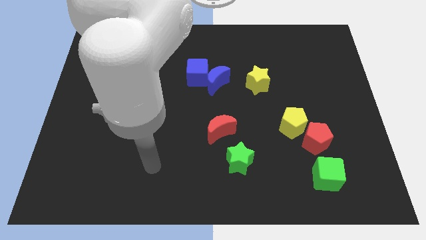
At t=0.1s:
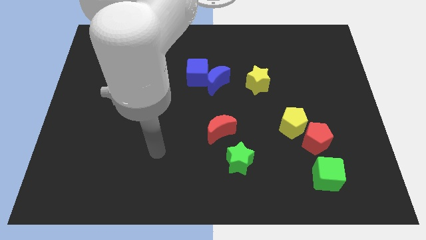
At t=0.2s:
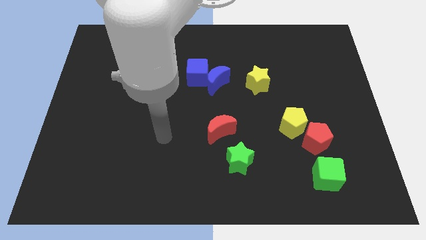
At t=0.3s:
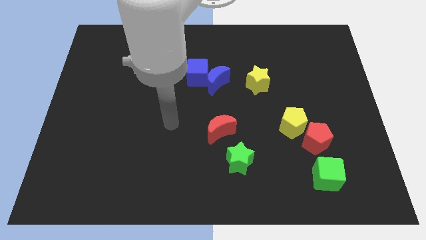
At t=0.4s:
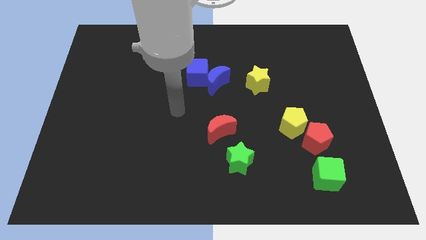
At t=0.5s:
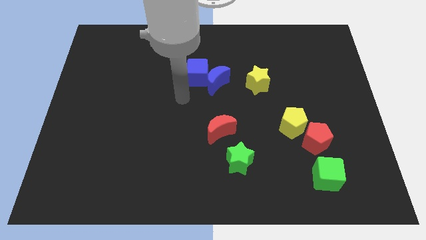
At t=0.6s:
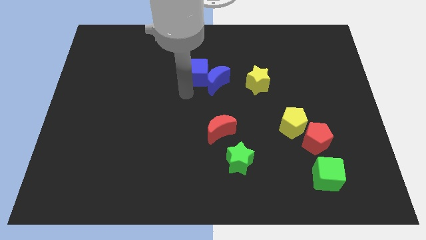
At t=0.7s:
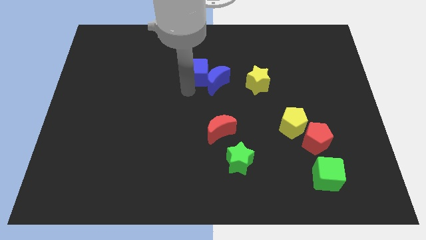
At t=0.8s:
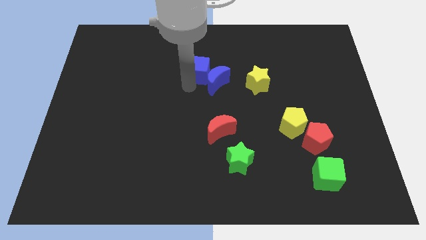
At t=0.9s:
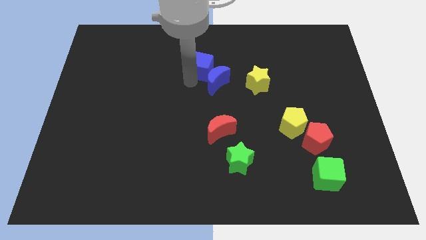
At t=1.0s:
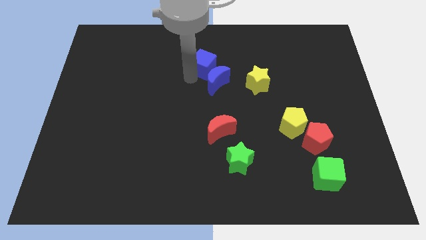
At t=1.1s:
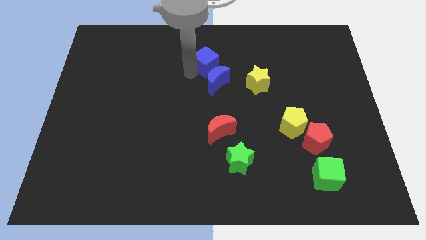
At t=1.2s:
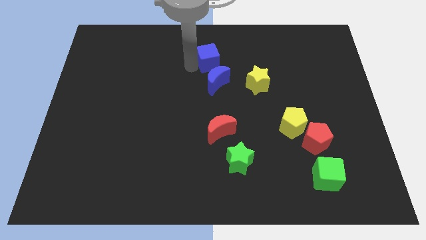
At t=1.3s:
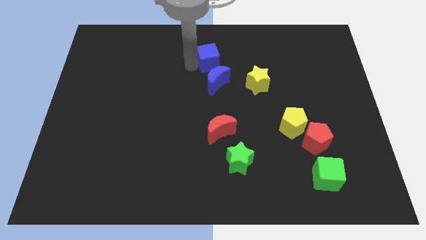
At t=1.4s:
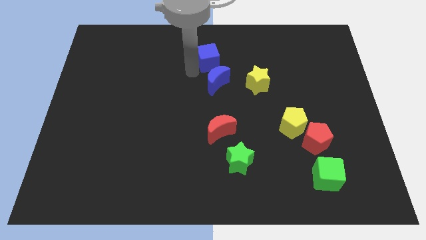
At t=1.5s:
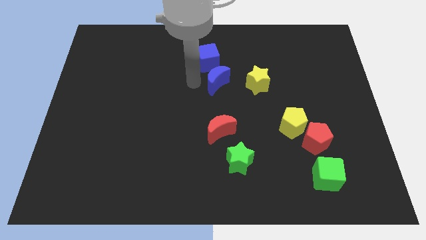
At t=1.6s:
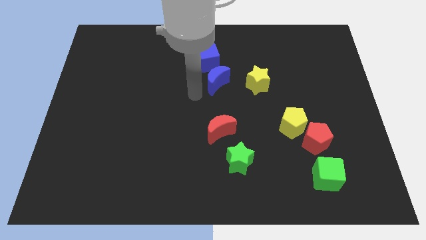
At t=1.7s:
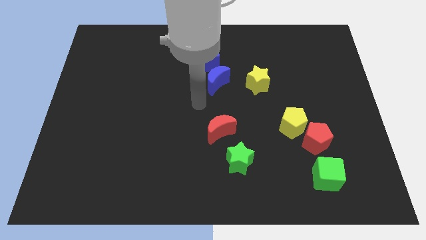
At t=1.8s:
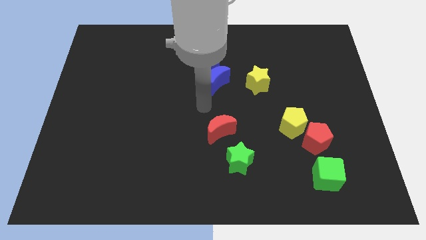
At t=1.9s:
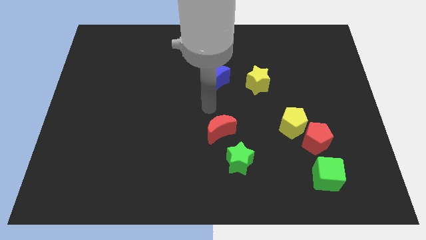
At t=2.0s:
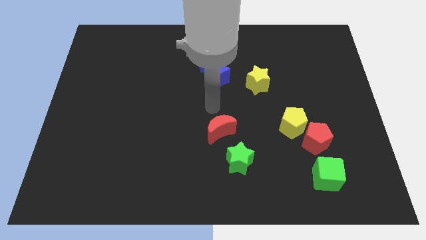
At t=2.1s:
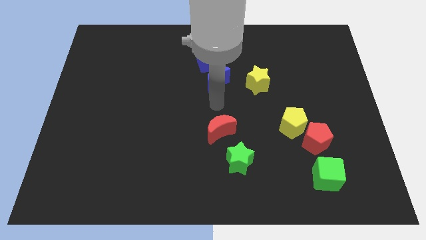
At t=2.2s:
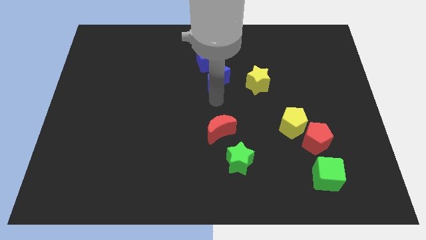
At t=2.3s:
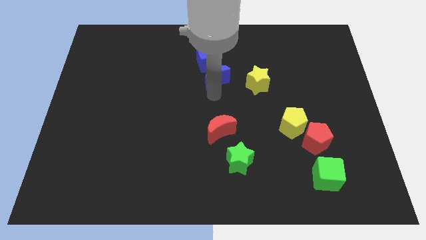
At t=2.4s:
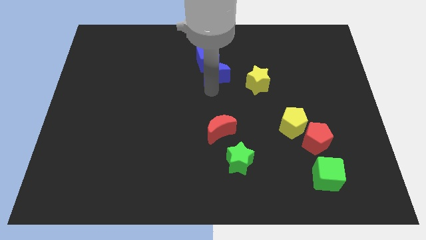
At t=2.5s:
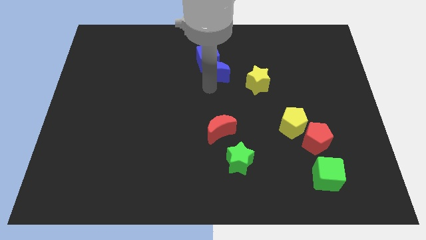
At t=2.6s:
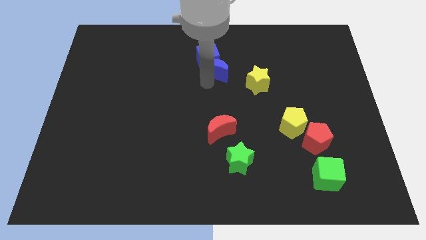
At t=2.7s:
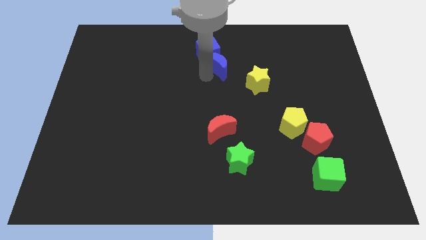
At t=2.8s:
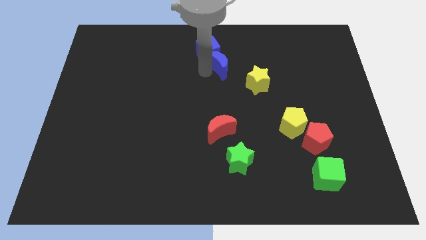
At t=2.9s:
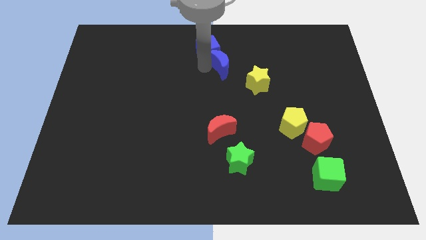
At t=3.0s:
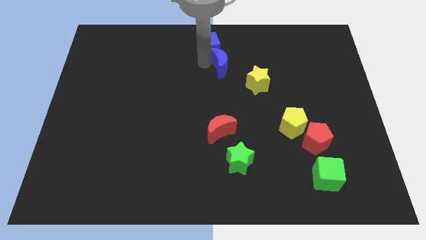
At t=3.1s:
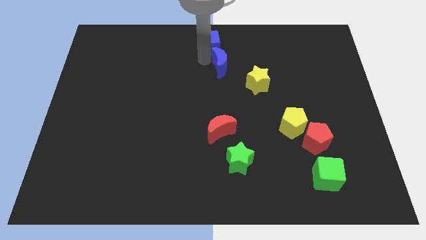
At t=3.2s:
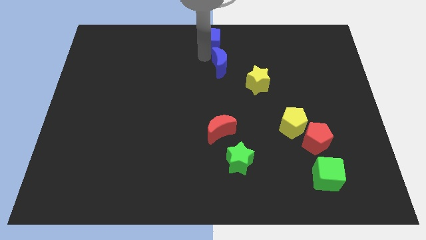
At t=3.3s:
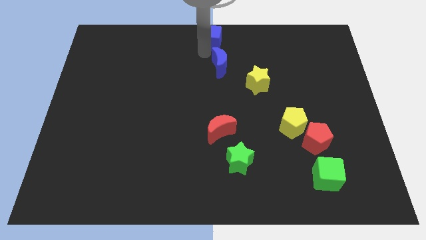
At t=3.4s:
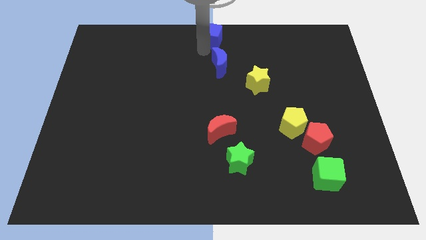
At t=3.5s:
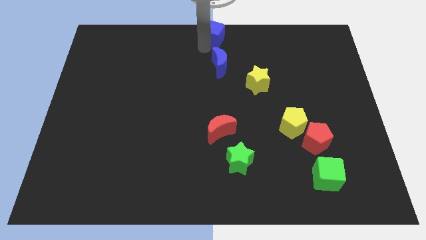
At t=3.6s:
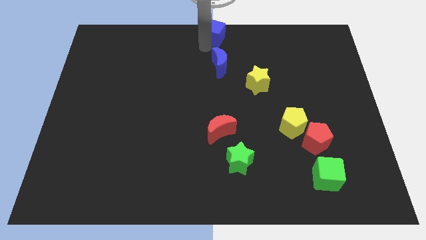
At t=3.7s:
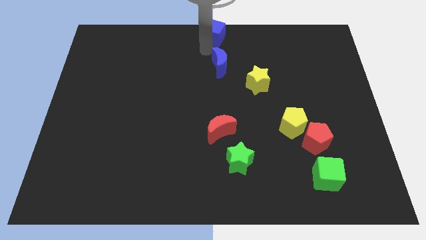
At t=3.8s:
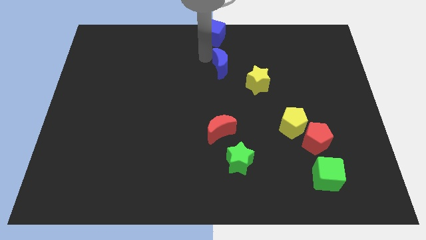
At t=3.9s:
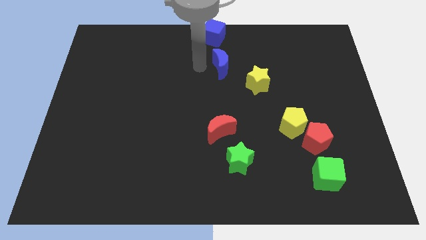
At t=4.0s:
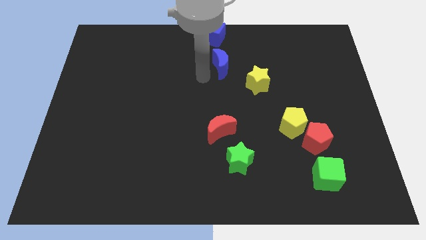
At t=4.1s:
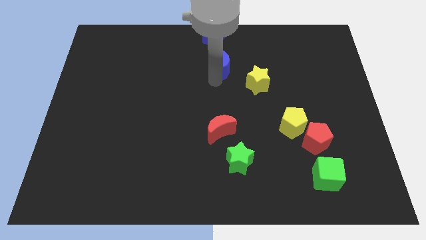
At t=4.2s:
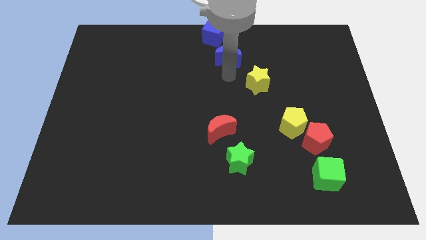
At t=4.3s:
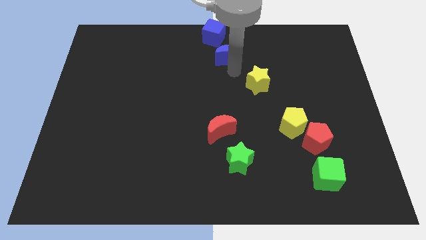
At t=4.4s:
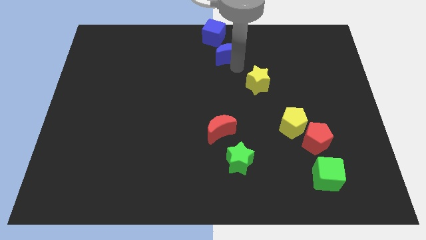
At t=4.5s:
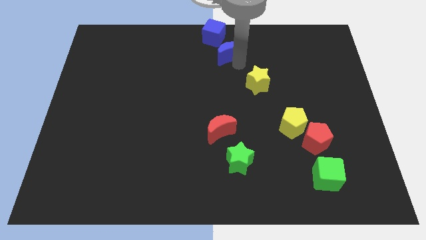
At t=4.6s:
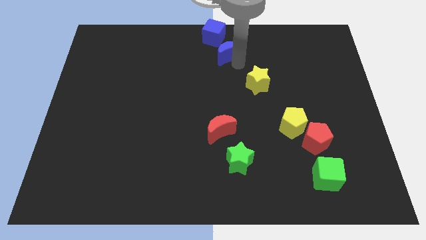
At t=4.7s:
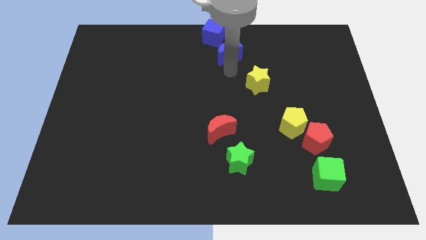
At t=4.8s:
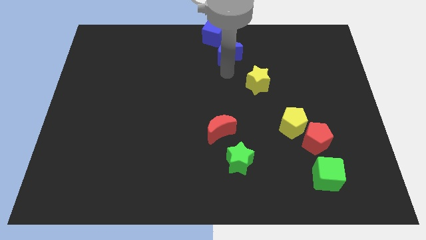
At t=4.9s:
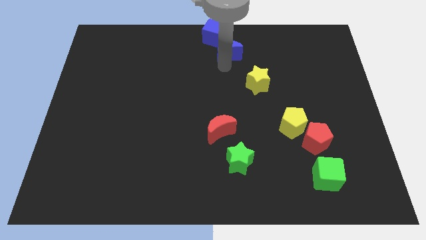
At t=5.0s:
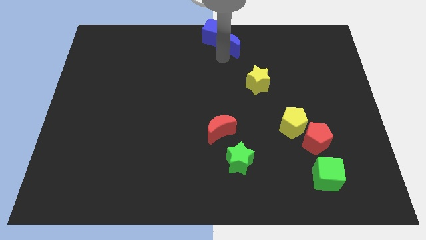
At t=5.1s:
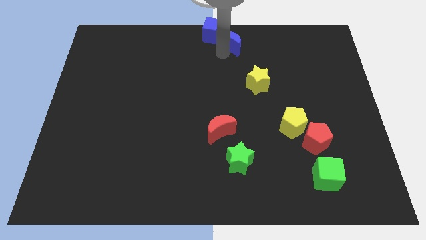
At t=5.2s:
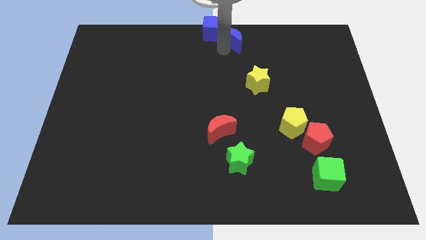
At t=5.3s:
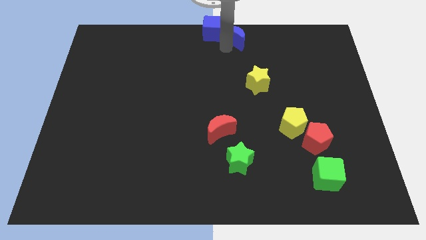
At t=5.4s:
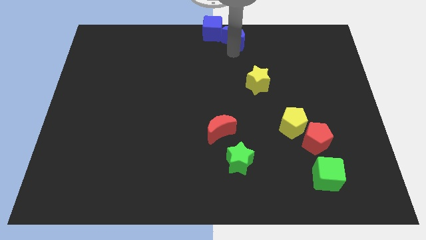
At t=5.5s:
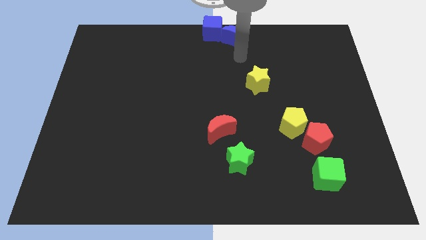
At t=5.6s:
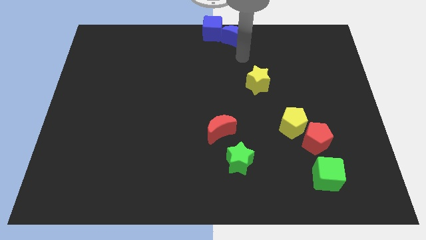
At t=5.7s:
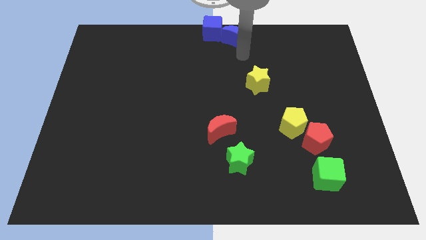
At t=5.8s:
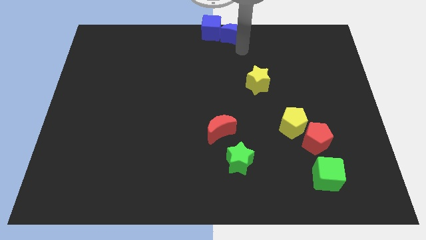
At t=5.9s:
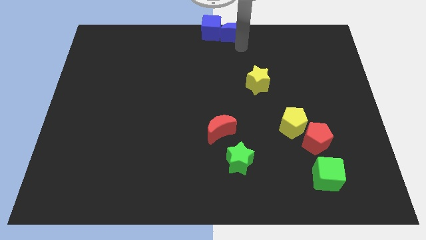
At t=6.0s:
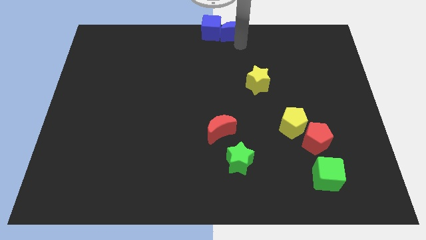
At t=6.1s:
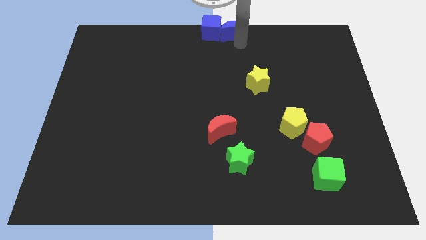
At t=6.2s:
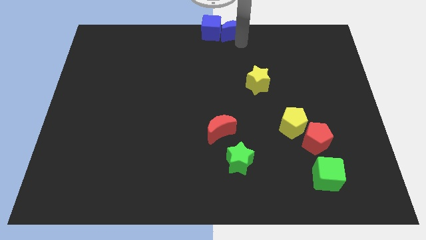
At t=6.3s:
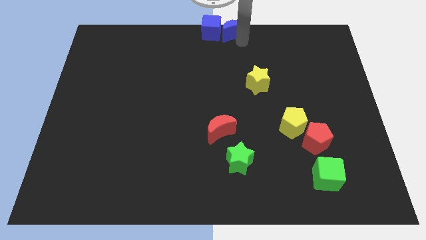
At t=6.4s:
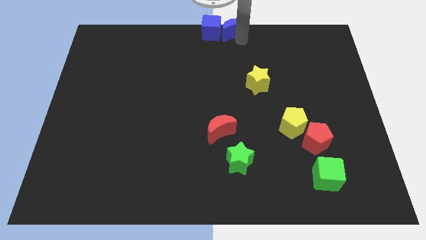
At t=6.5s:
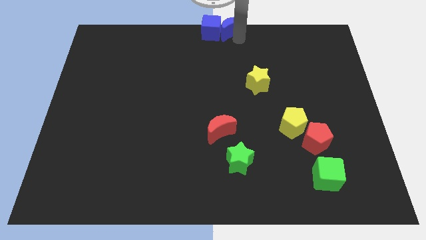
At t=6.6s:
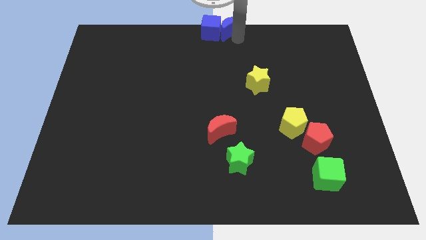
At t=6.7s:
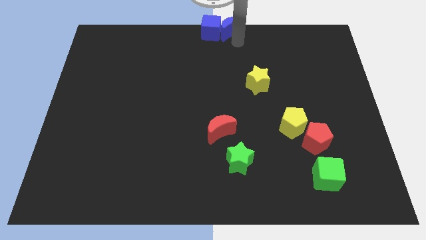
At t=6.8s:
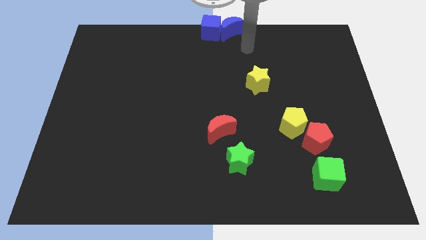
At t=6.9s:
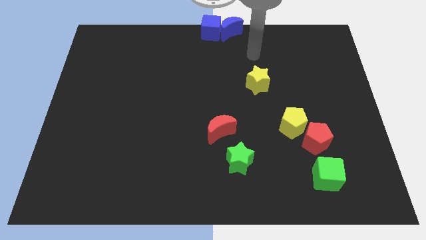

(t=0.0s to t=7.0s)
push the blue cube and blue crescent paralley to the top center of board

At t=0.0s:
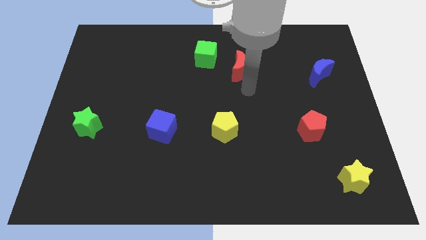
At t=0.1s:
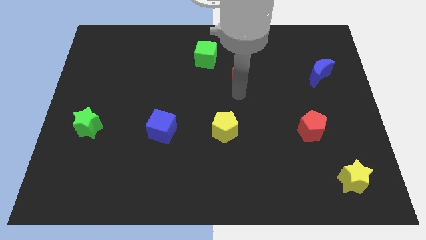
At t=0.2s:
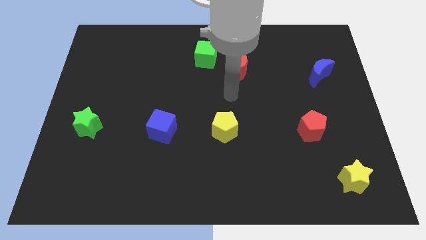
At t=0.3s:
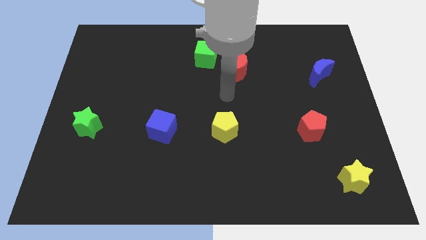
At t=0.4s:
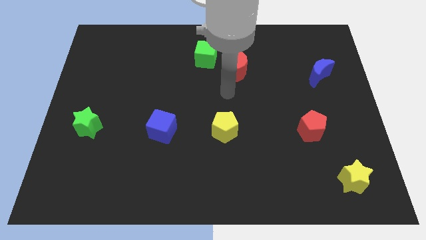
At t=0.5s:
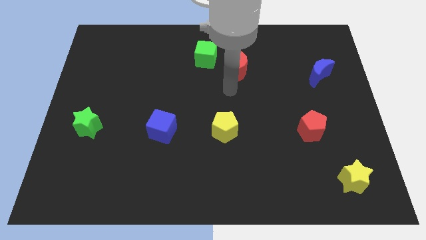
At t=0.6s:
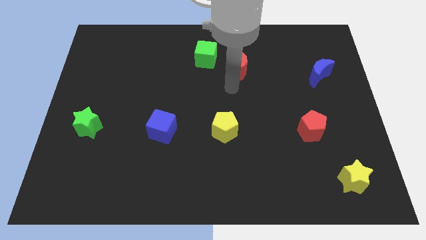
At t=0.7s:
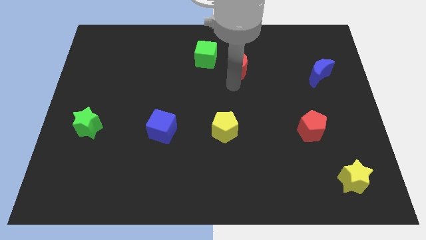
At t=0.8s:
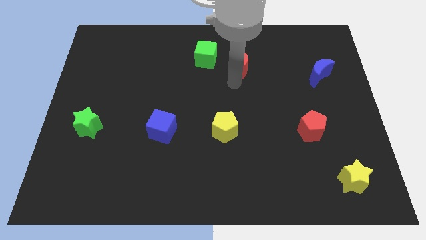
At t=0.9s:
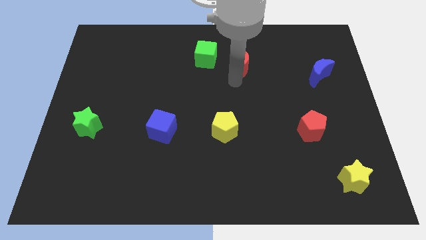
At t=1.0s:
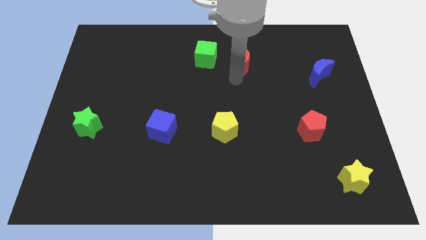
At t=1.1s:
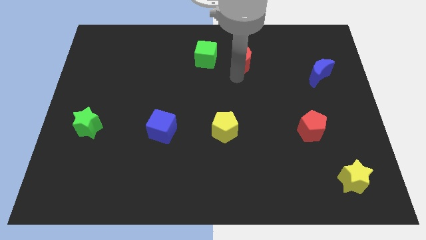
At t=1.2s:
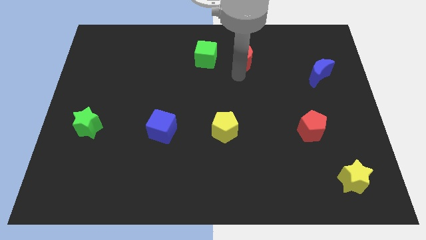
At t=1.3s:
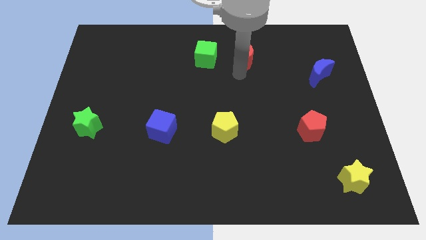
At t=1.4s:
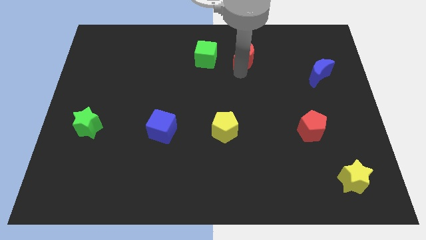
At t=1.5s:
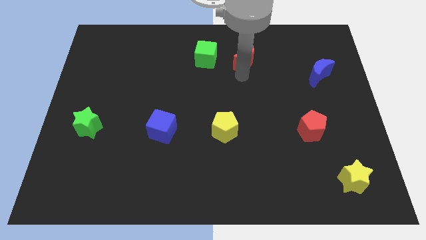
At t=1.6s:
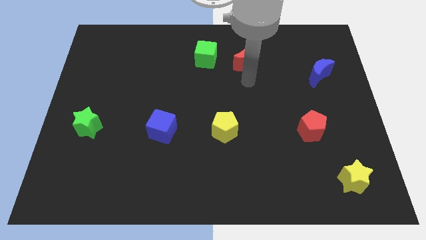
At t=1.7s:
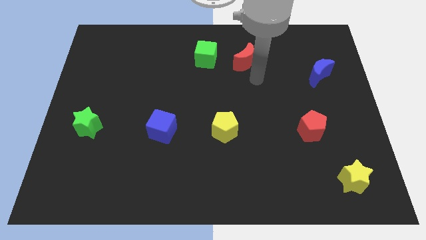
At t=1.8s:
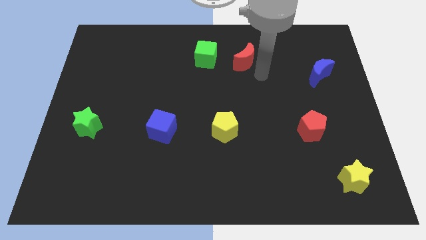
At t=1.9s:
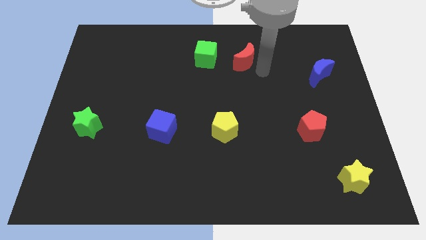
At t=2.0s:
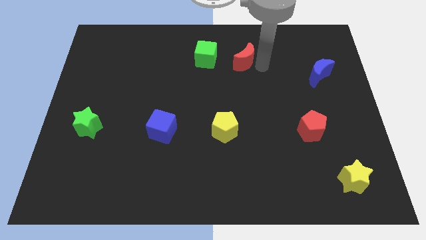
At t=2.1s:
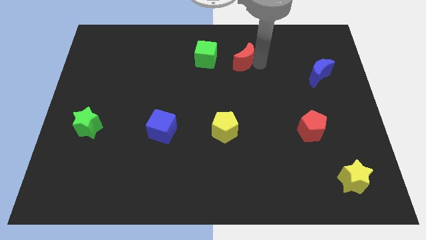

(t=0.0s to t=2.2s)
push the red moon to the right side of the green cube
